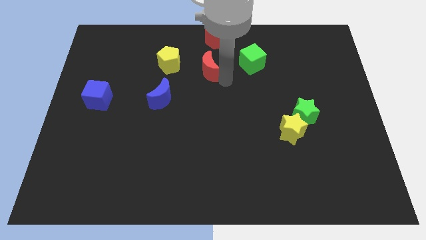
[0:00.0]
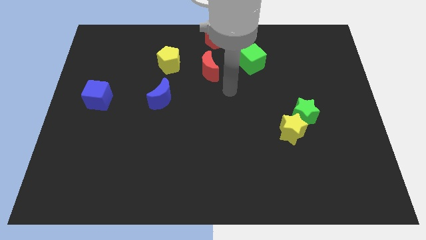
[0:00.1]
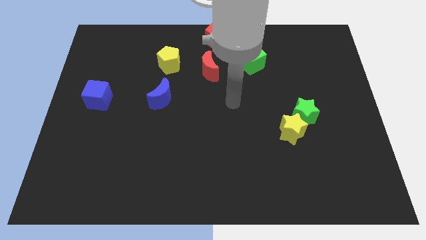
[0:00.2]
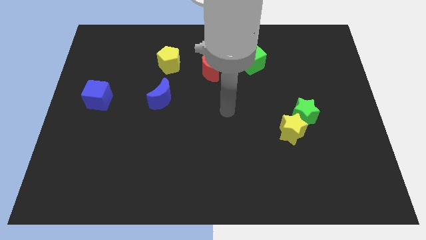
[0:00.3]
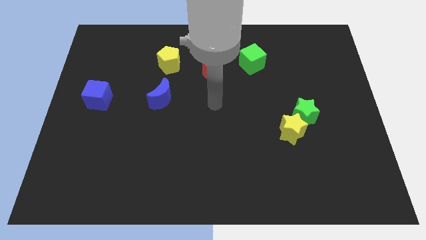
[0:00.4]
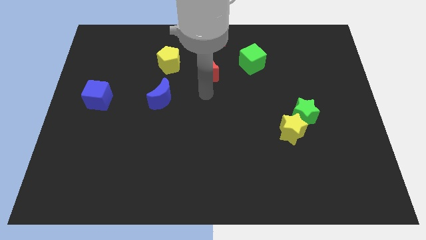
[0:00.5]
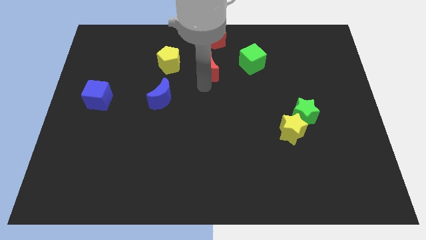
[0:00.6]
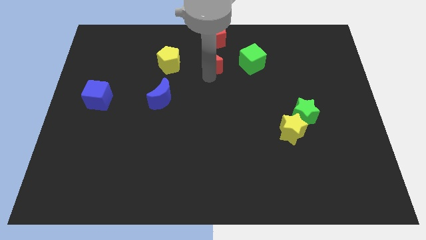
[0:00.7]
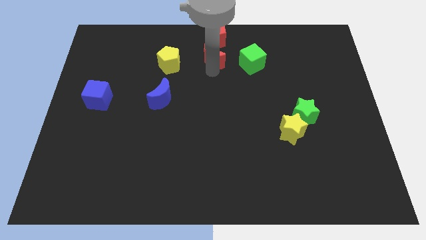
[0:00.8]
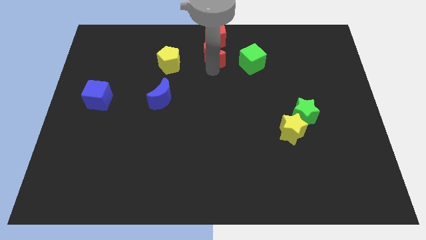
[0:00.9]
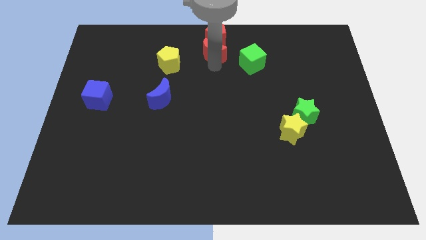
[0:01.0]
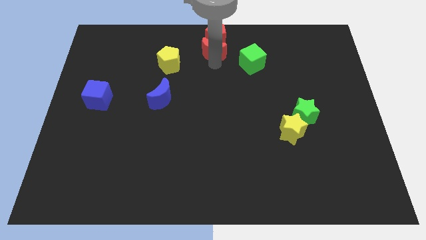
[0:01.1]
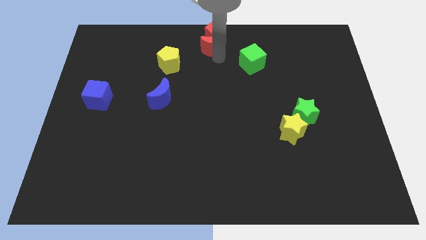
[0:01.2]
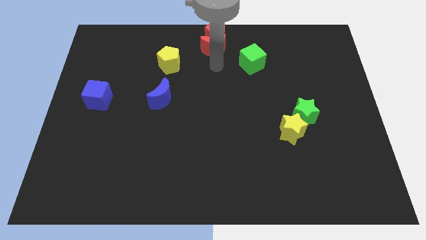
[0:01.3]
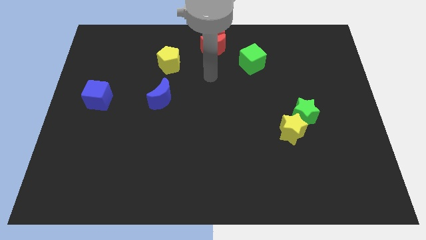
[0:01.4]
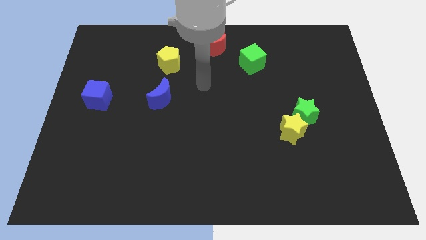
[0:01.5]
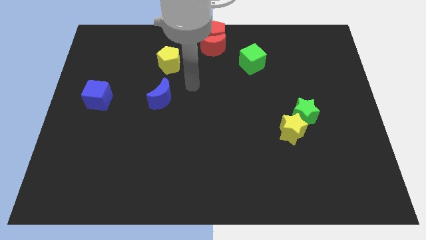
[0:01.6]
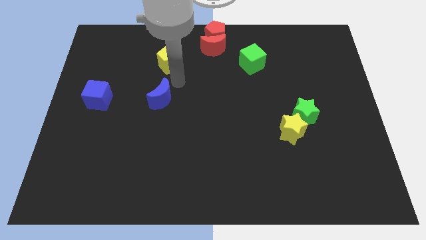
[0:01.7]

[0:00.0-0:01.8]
move red crescent towards the red pentagon

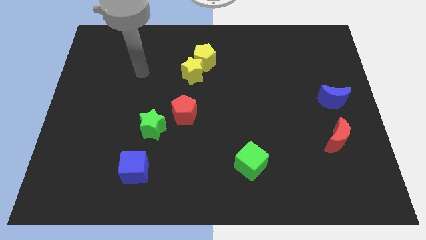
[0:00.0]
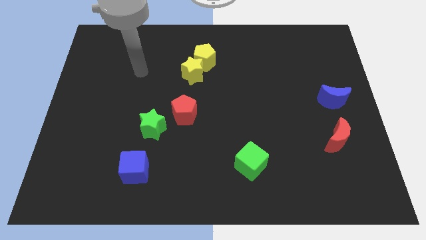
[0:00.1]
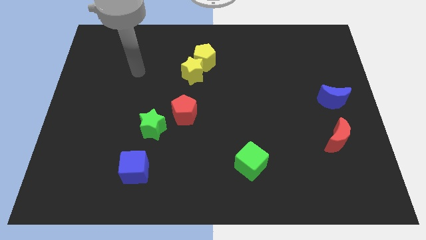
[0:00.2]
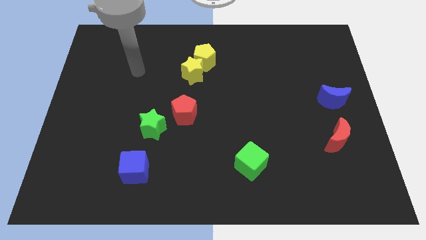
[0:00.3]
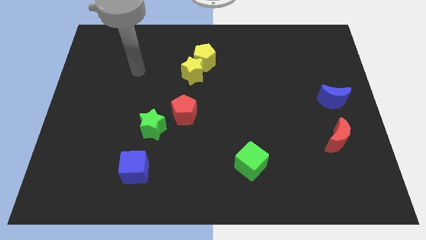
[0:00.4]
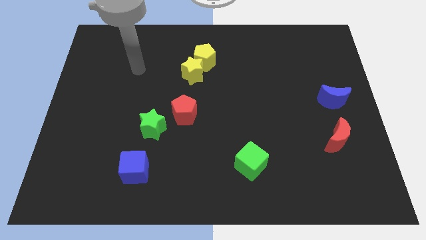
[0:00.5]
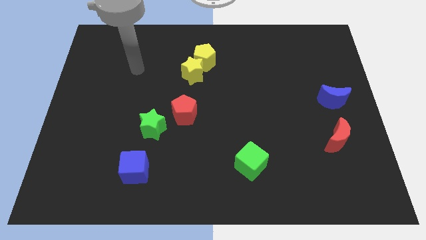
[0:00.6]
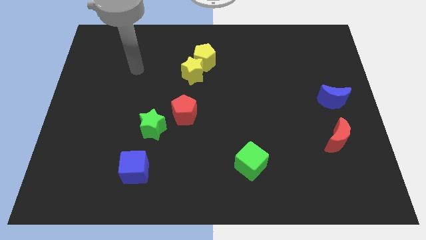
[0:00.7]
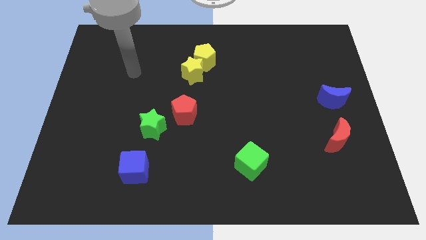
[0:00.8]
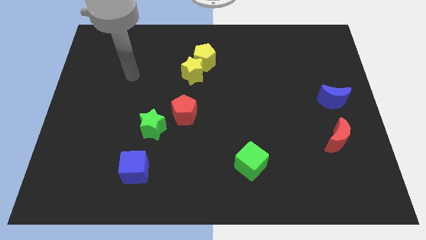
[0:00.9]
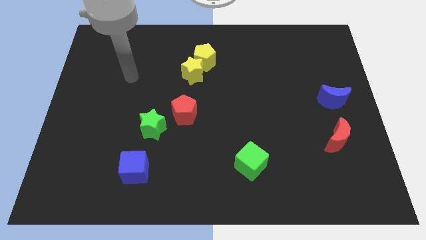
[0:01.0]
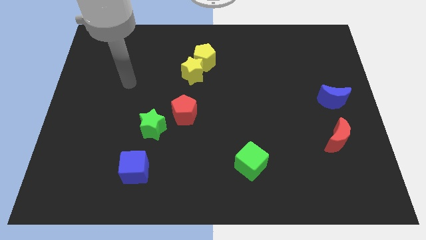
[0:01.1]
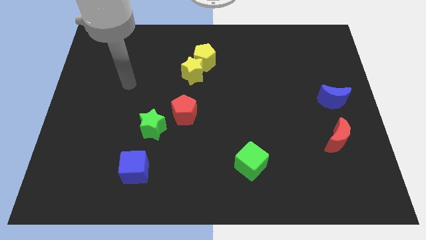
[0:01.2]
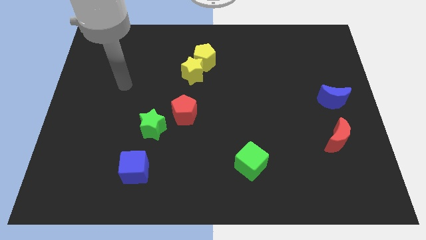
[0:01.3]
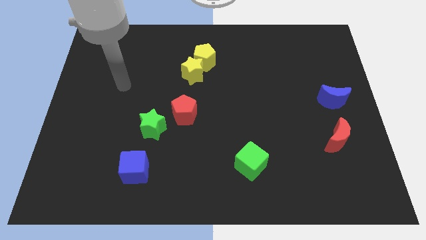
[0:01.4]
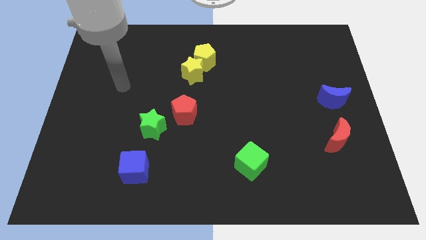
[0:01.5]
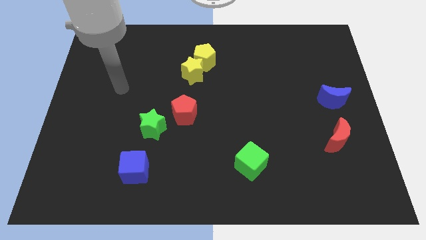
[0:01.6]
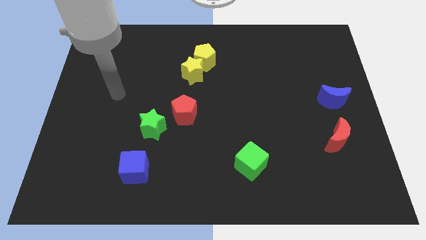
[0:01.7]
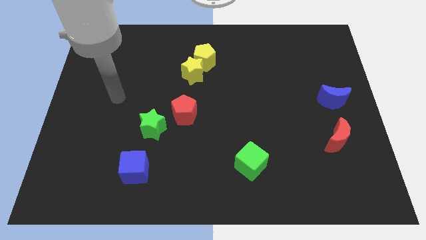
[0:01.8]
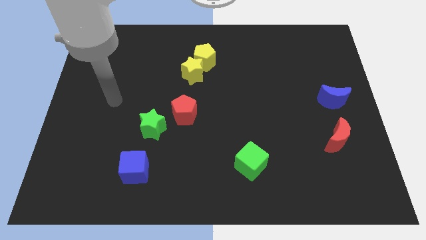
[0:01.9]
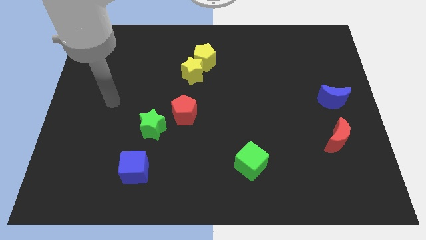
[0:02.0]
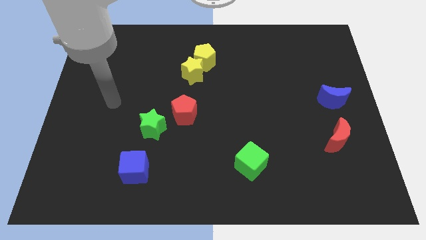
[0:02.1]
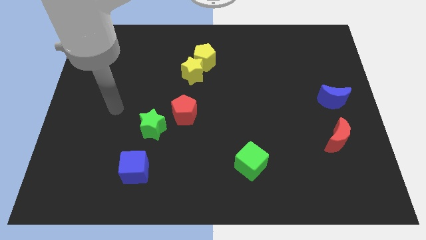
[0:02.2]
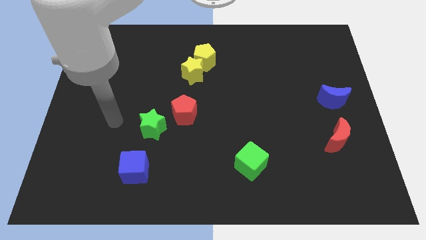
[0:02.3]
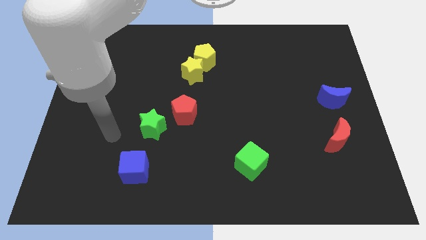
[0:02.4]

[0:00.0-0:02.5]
point your arm to the left side of green star

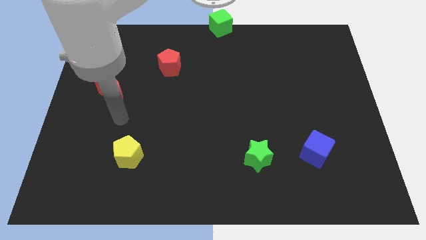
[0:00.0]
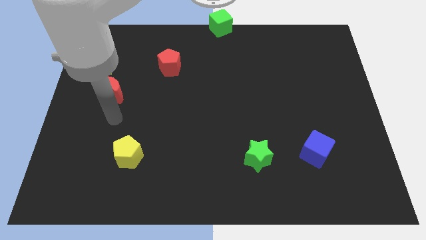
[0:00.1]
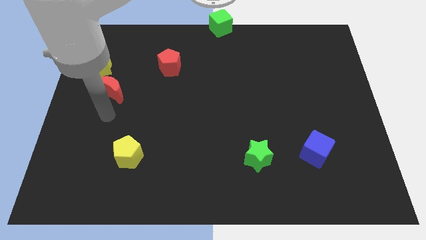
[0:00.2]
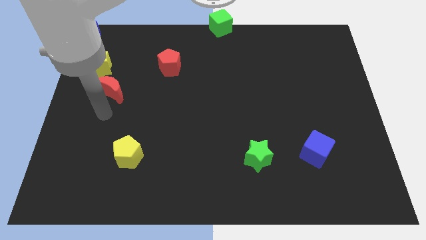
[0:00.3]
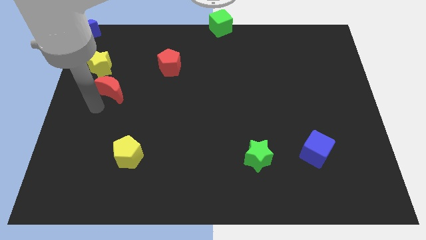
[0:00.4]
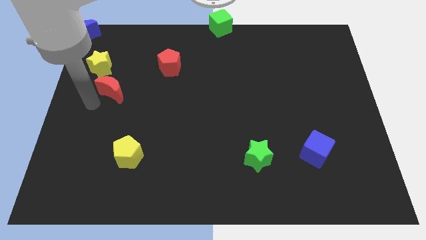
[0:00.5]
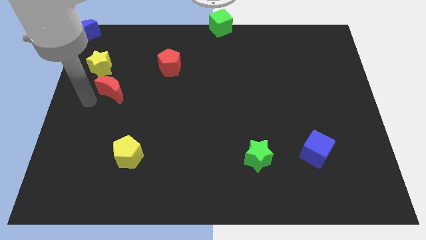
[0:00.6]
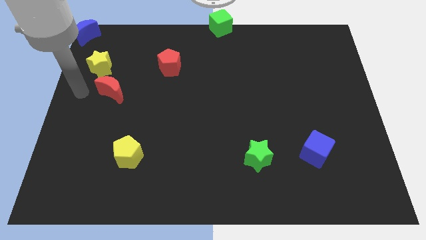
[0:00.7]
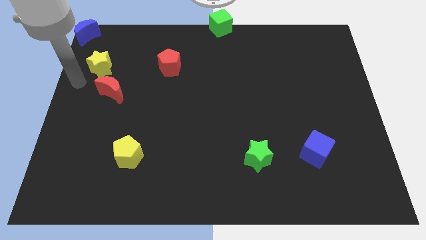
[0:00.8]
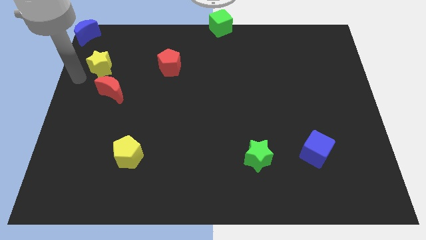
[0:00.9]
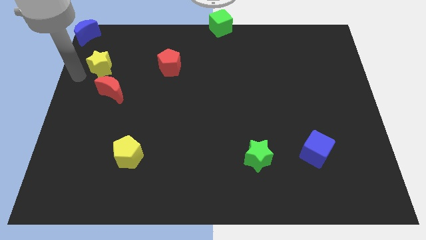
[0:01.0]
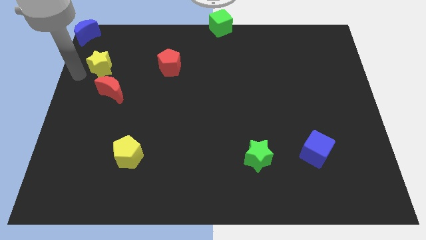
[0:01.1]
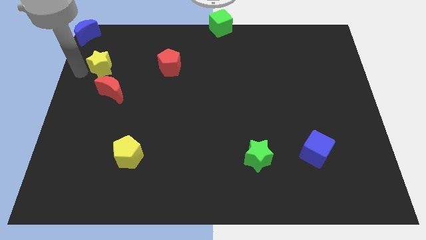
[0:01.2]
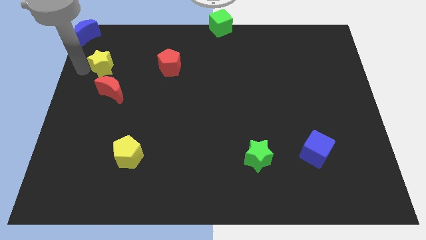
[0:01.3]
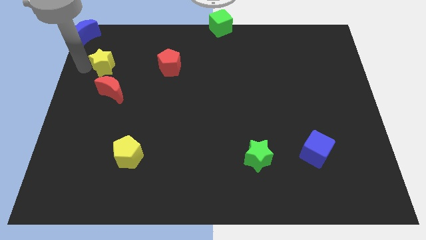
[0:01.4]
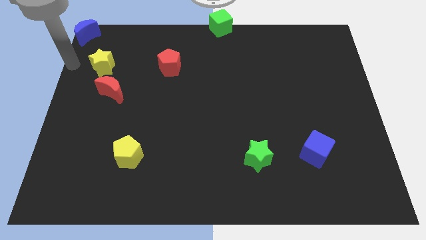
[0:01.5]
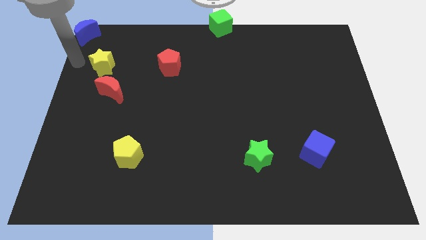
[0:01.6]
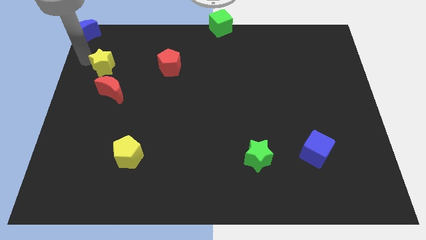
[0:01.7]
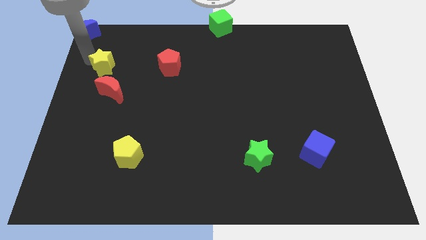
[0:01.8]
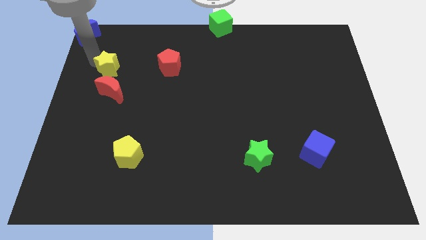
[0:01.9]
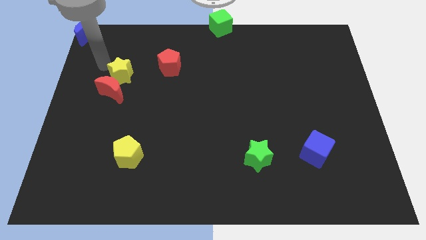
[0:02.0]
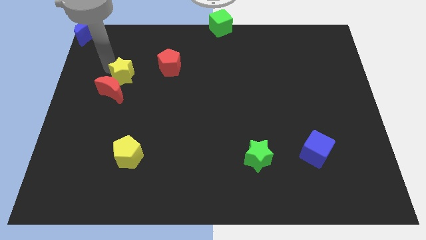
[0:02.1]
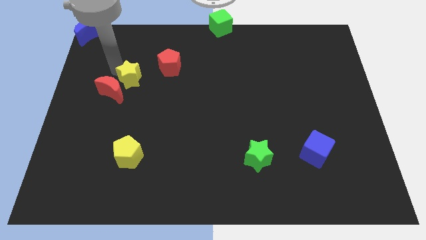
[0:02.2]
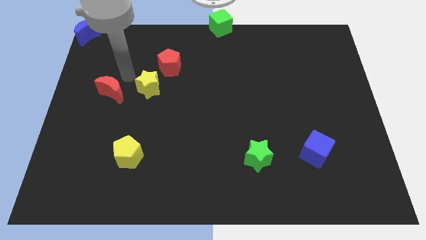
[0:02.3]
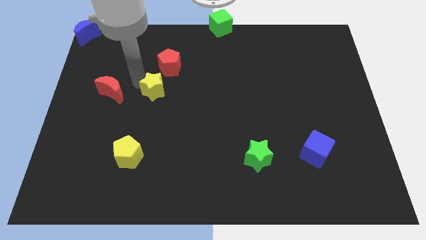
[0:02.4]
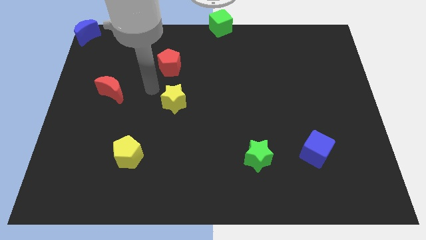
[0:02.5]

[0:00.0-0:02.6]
place the yellow star below the red pentagon

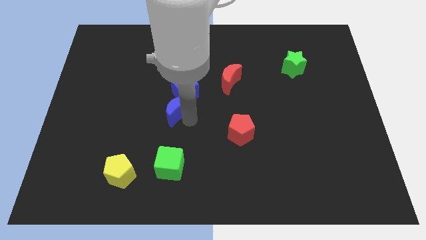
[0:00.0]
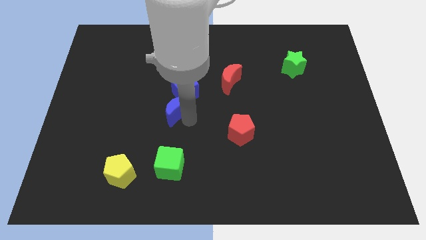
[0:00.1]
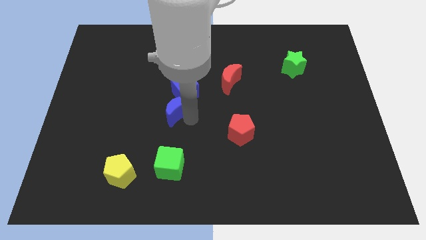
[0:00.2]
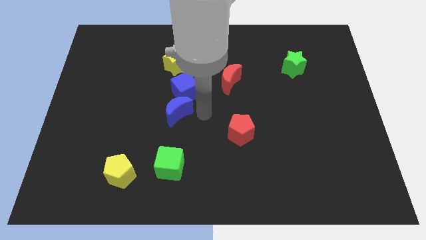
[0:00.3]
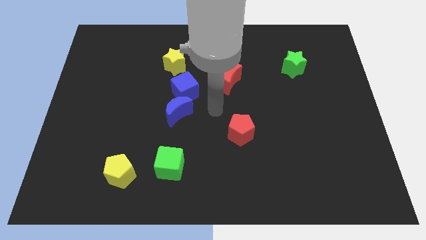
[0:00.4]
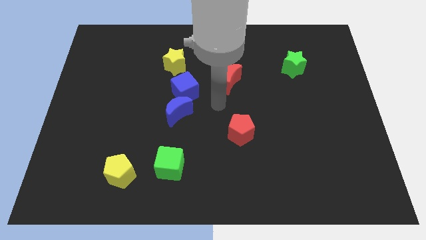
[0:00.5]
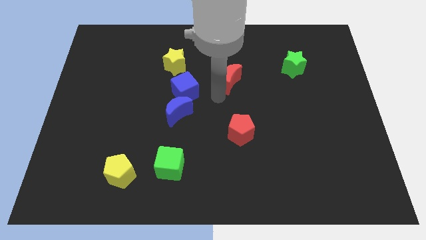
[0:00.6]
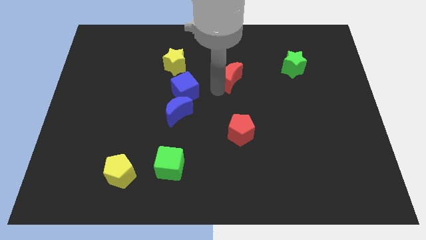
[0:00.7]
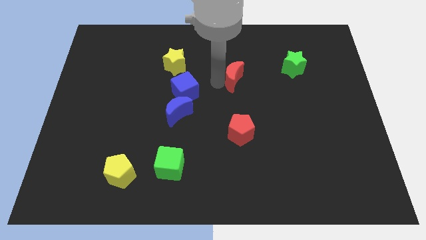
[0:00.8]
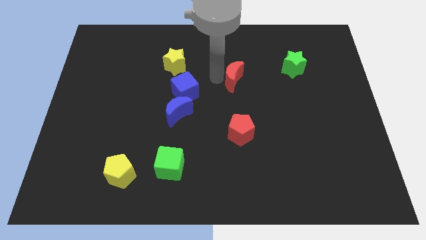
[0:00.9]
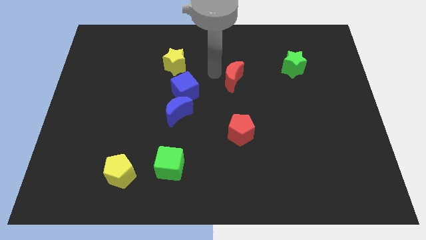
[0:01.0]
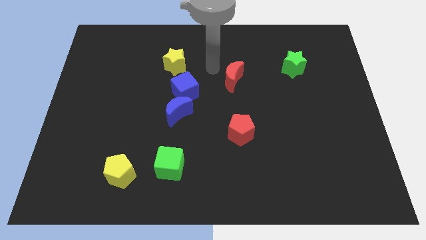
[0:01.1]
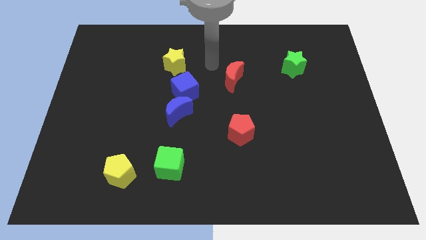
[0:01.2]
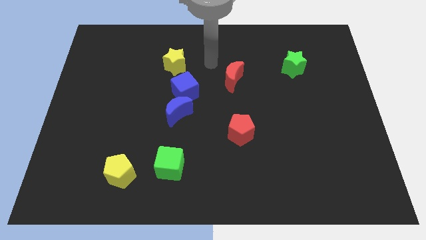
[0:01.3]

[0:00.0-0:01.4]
point the arm to the right of the yellow star

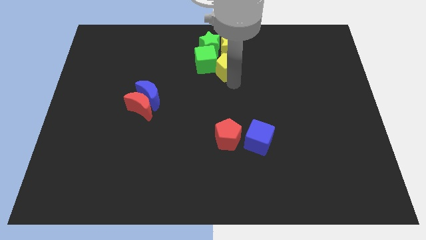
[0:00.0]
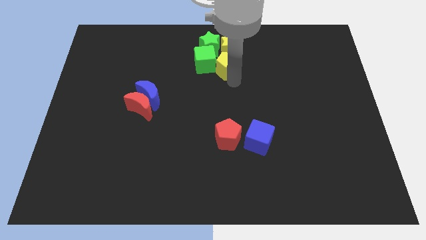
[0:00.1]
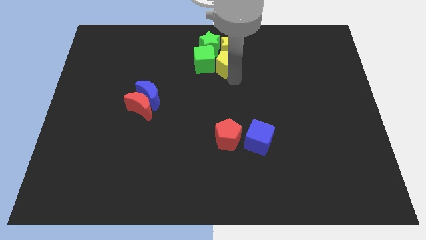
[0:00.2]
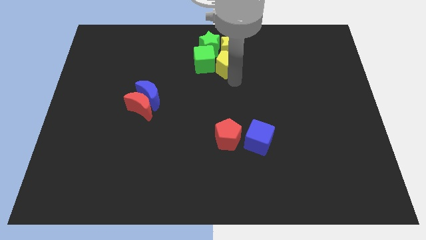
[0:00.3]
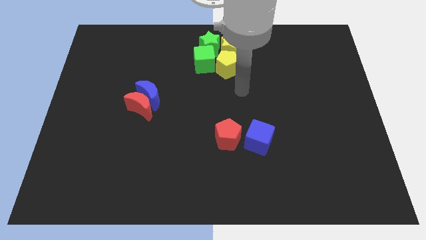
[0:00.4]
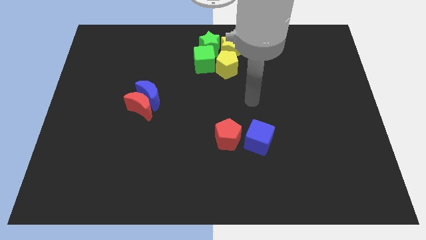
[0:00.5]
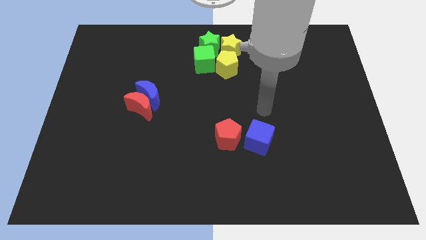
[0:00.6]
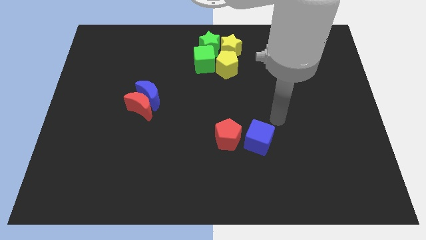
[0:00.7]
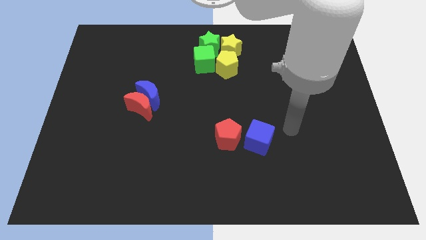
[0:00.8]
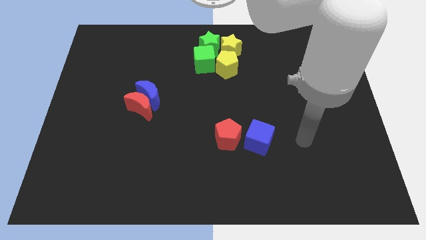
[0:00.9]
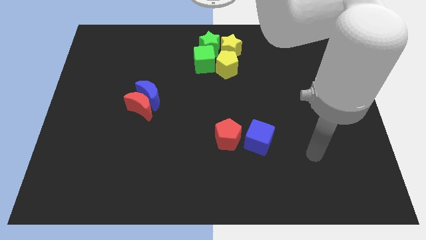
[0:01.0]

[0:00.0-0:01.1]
move your arm to the right of blue cube
